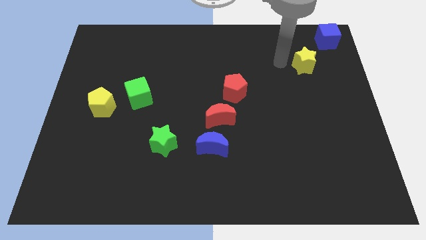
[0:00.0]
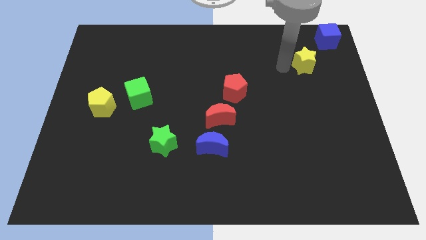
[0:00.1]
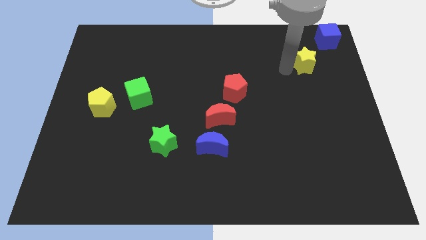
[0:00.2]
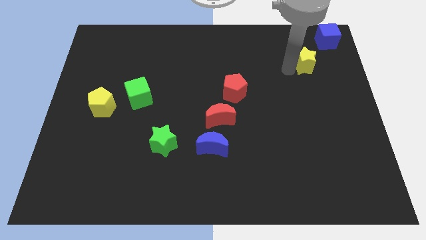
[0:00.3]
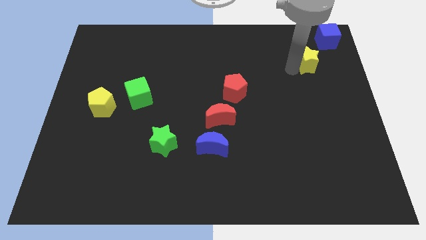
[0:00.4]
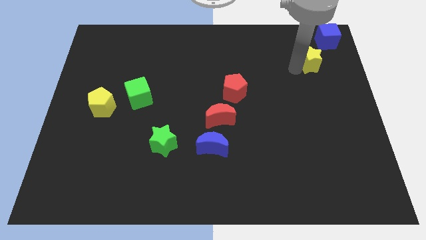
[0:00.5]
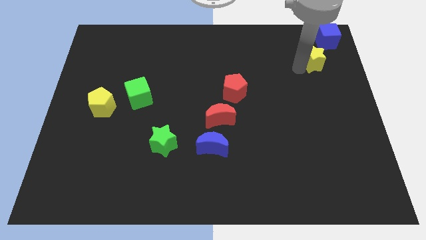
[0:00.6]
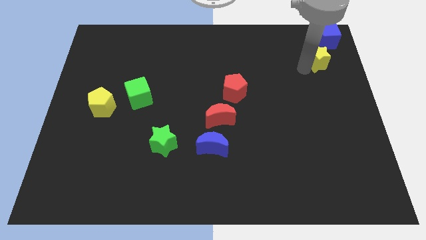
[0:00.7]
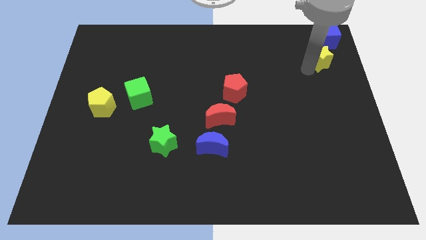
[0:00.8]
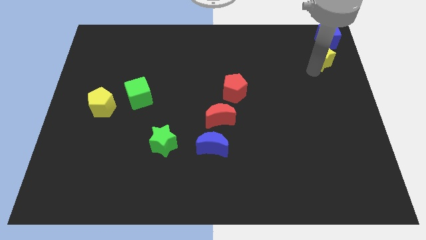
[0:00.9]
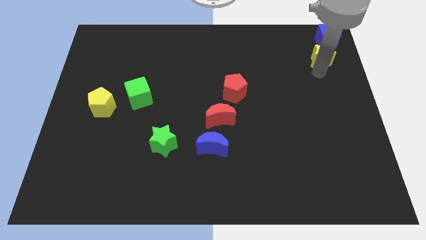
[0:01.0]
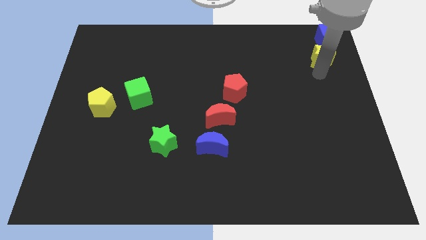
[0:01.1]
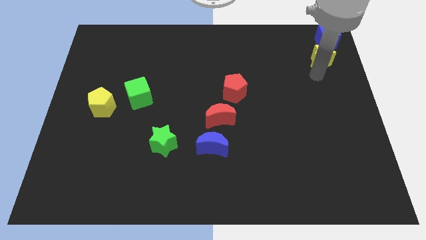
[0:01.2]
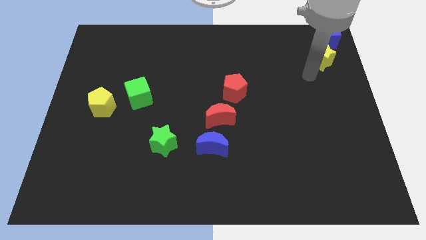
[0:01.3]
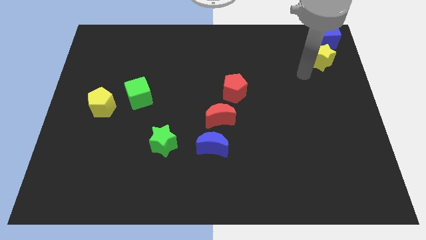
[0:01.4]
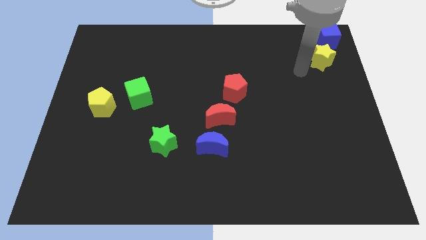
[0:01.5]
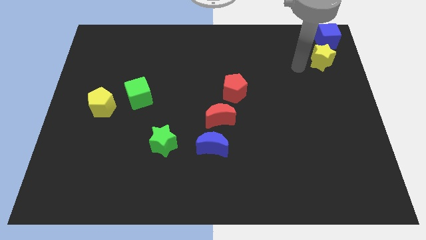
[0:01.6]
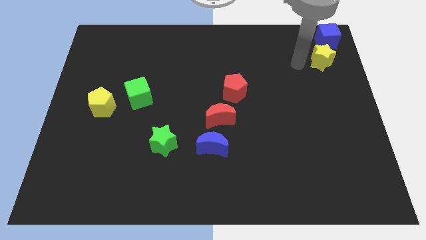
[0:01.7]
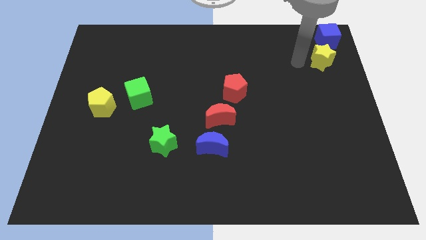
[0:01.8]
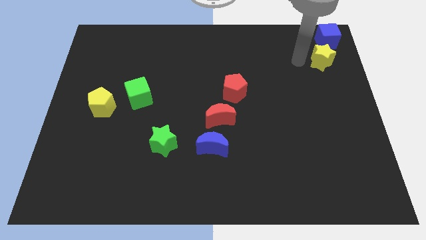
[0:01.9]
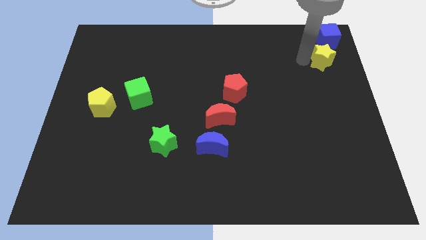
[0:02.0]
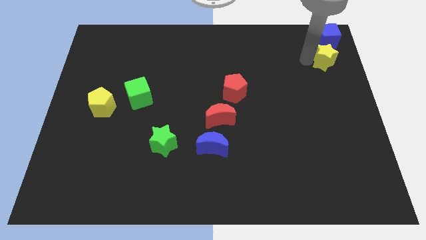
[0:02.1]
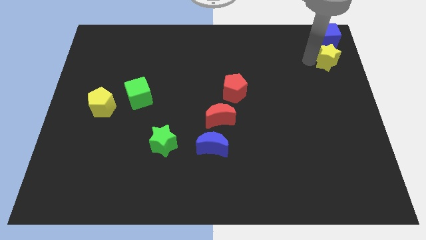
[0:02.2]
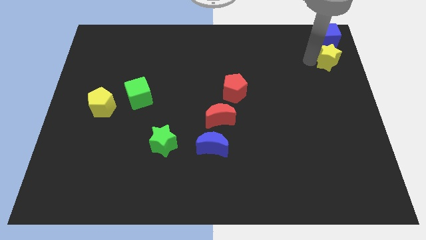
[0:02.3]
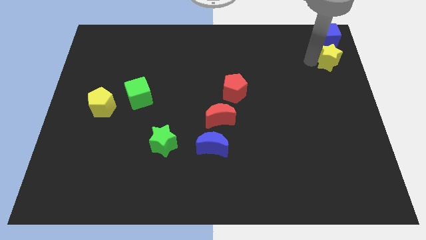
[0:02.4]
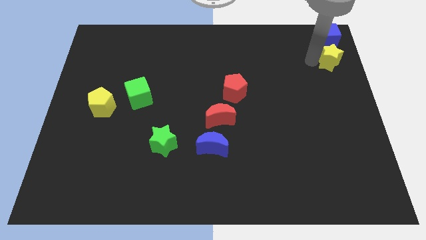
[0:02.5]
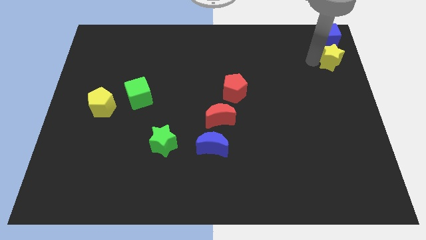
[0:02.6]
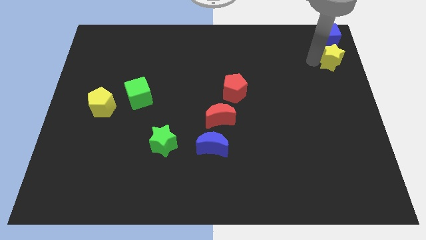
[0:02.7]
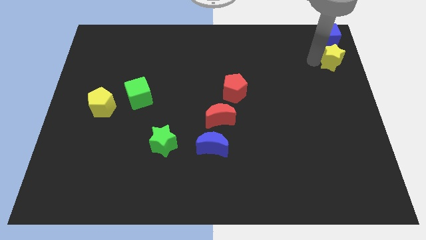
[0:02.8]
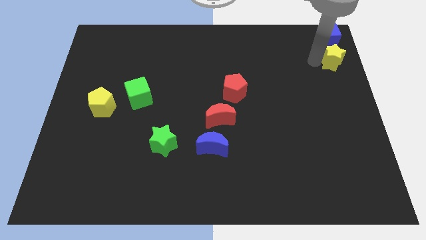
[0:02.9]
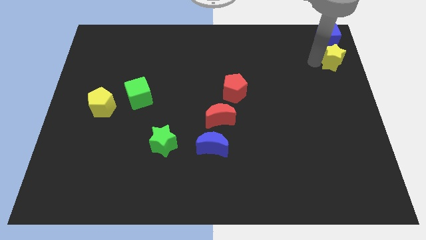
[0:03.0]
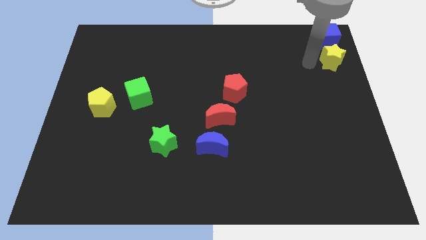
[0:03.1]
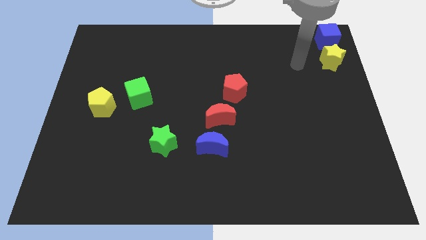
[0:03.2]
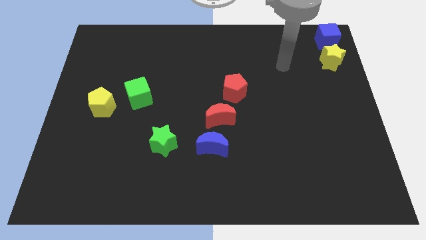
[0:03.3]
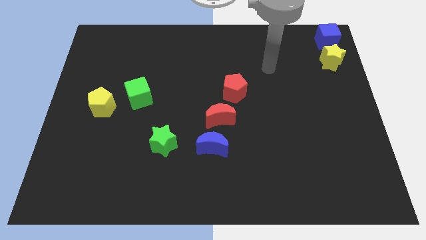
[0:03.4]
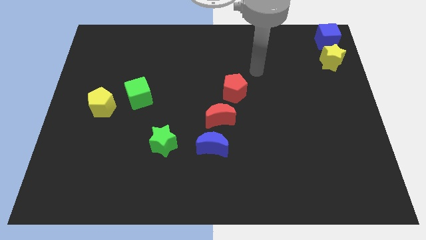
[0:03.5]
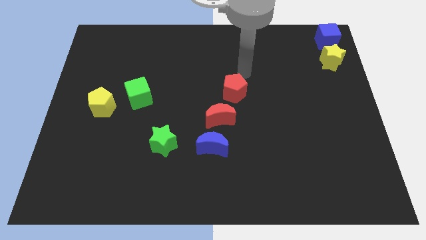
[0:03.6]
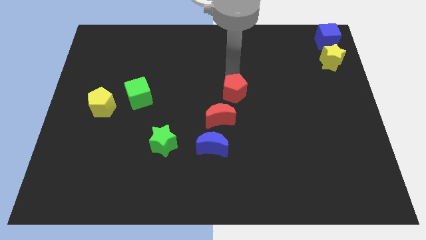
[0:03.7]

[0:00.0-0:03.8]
put the yellow star vertically below the blue cube

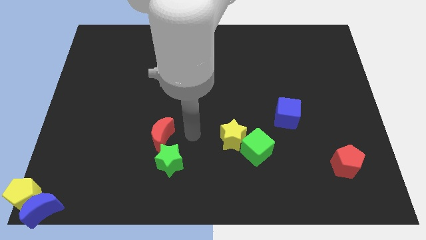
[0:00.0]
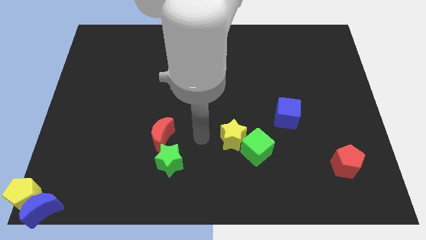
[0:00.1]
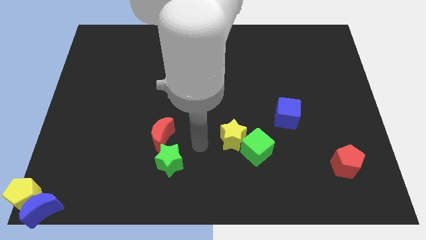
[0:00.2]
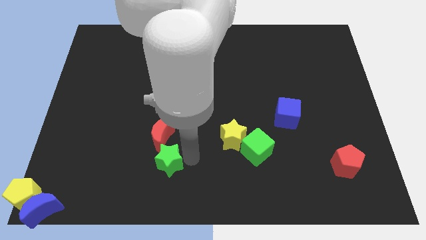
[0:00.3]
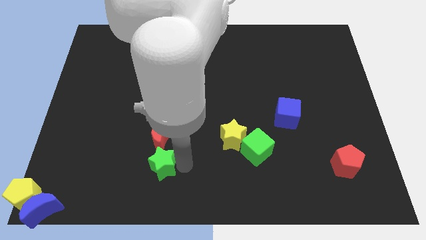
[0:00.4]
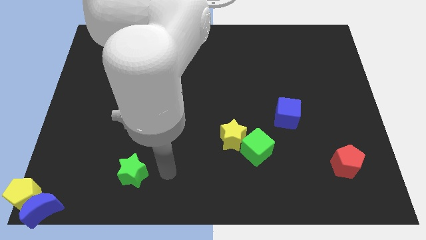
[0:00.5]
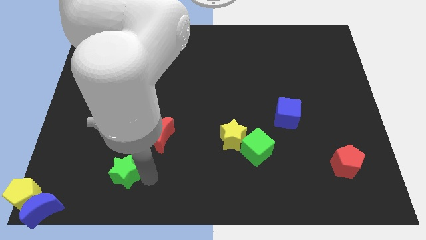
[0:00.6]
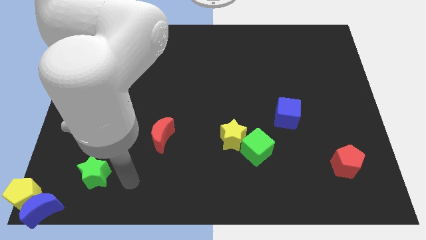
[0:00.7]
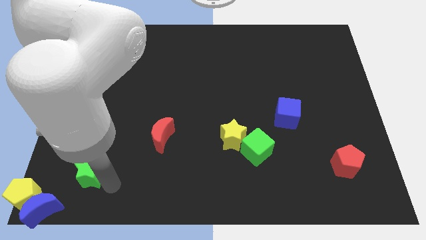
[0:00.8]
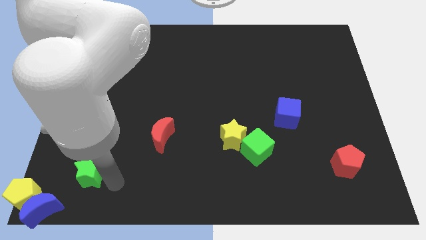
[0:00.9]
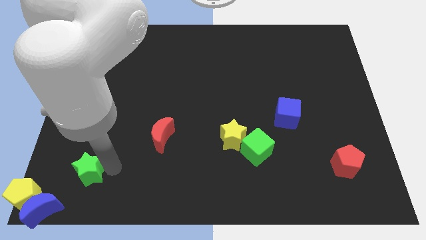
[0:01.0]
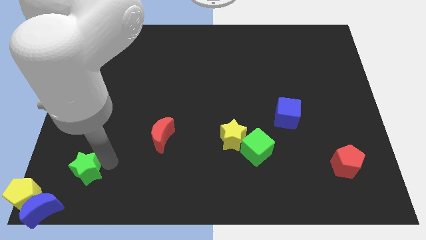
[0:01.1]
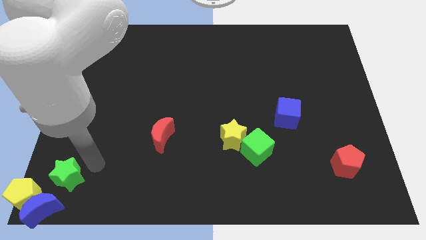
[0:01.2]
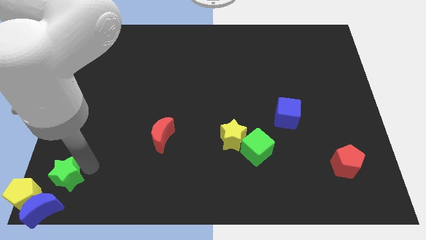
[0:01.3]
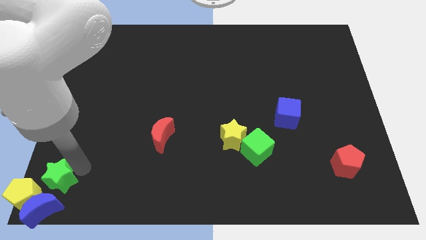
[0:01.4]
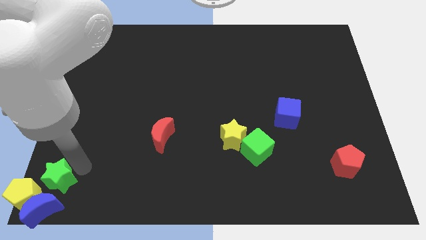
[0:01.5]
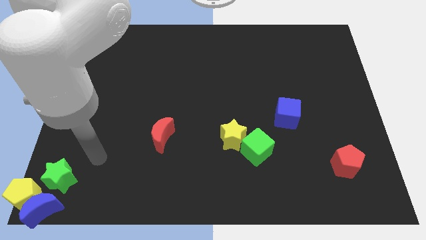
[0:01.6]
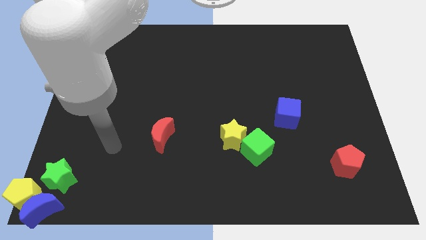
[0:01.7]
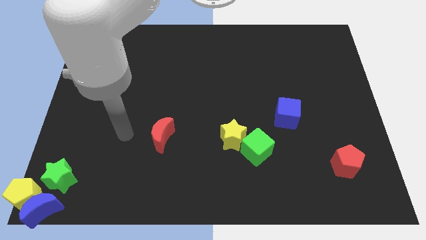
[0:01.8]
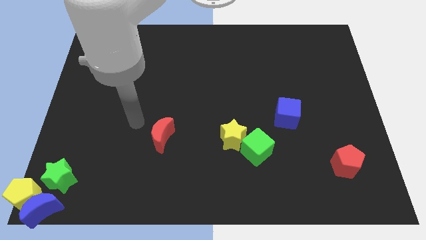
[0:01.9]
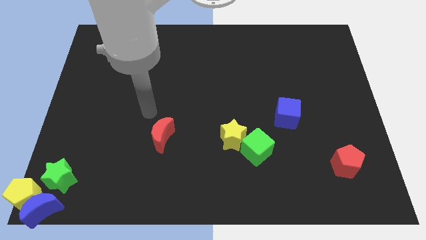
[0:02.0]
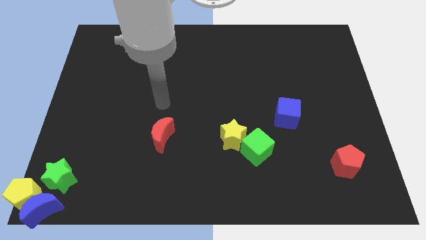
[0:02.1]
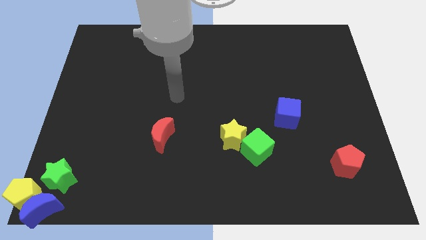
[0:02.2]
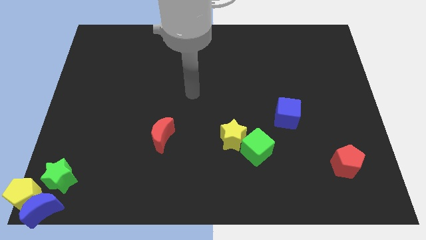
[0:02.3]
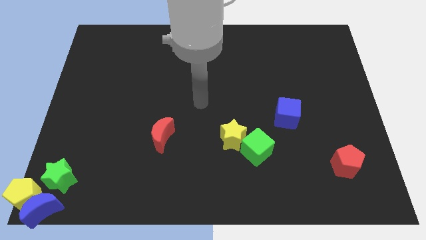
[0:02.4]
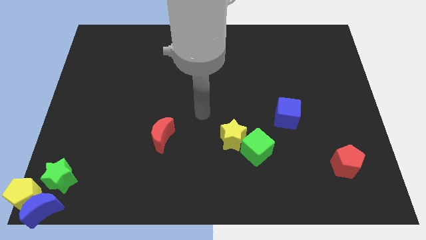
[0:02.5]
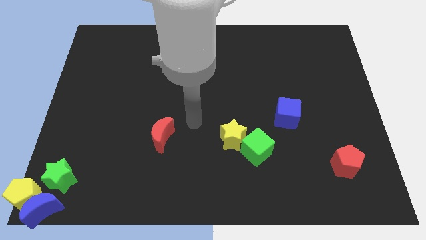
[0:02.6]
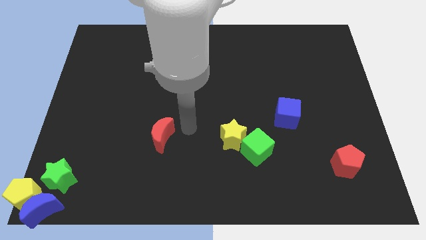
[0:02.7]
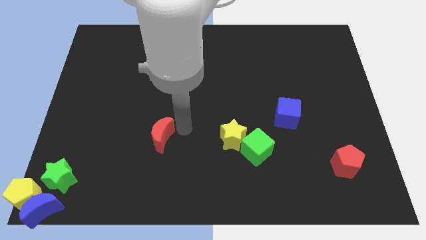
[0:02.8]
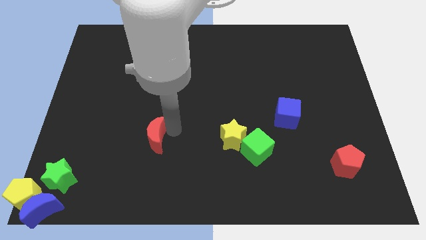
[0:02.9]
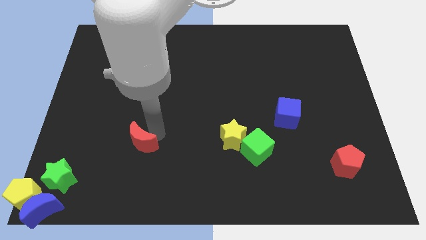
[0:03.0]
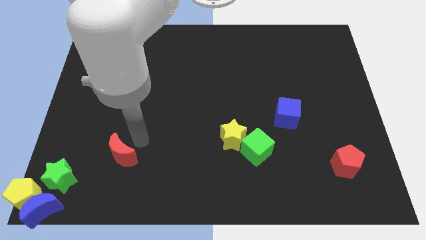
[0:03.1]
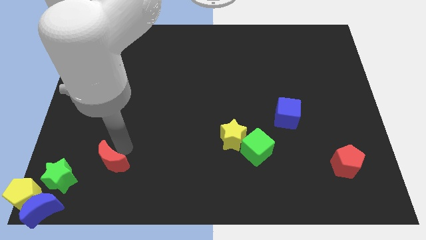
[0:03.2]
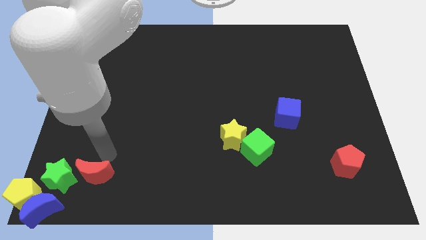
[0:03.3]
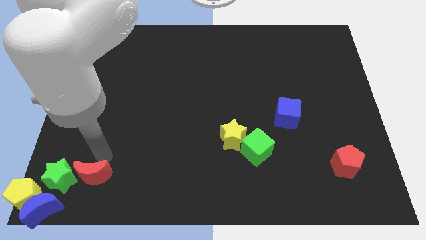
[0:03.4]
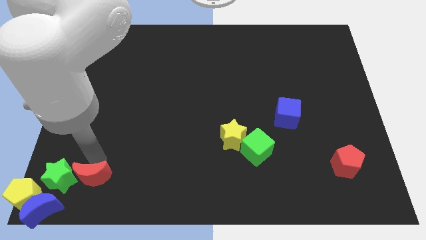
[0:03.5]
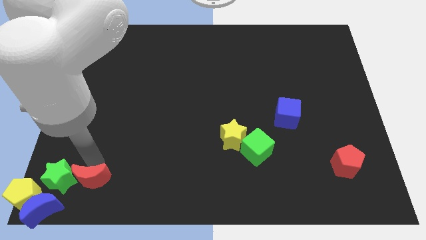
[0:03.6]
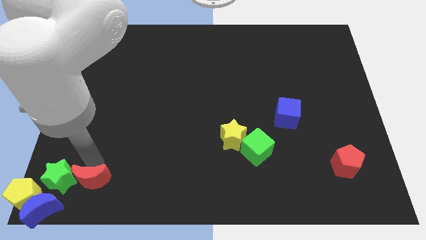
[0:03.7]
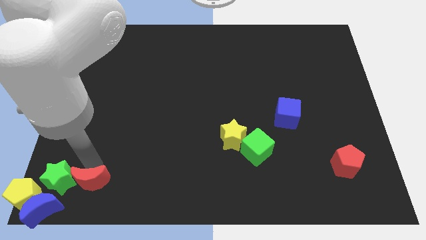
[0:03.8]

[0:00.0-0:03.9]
move the green star and red crescent close to the yellow pentagon and blue moon

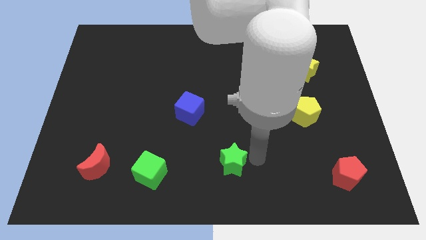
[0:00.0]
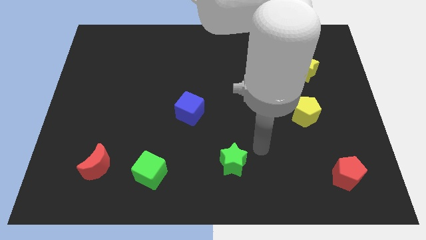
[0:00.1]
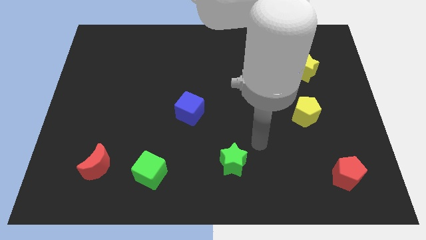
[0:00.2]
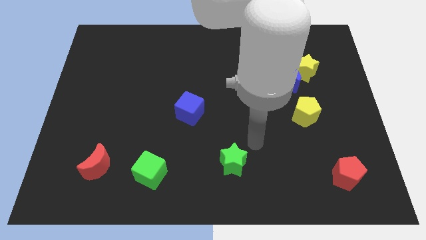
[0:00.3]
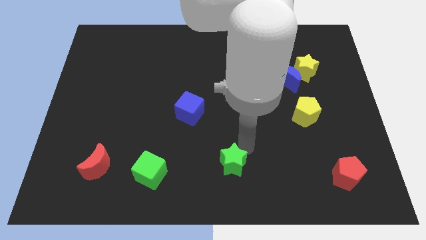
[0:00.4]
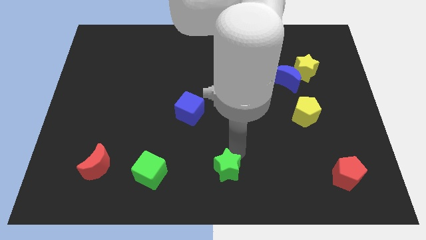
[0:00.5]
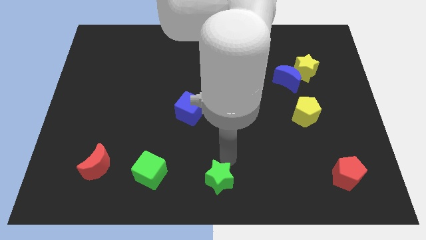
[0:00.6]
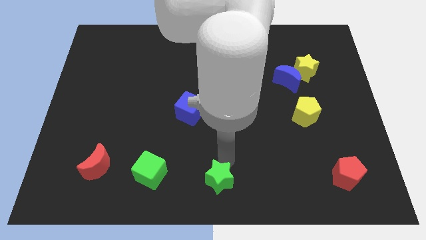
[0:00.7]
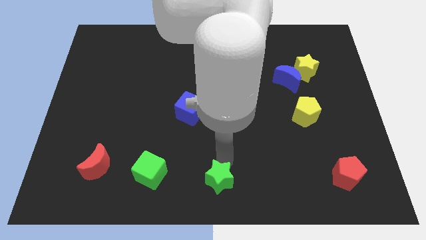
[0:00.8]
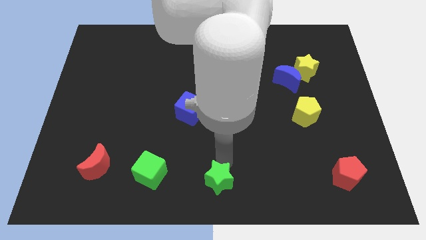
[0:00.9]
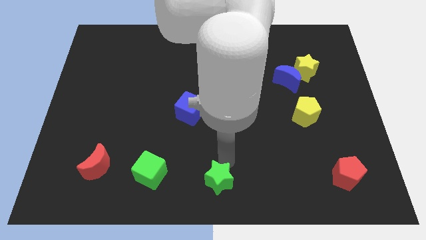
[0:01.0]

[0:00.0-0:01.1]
move the green star slightly to the bottom center of the board
